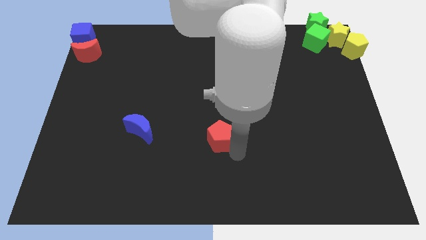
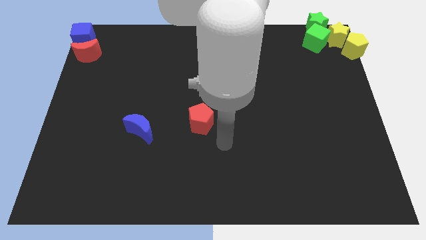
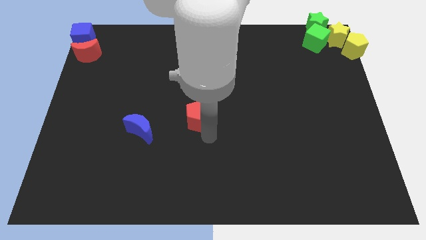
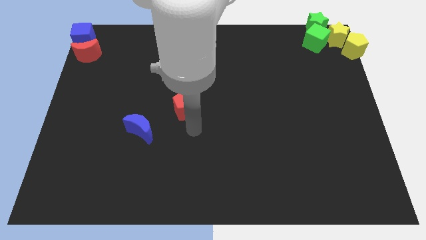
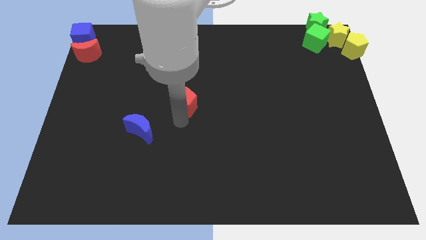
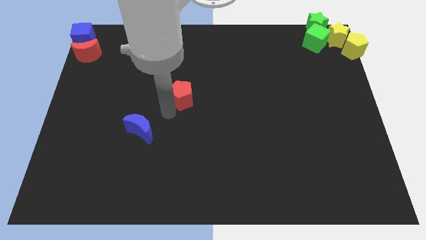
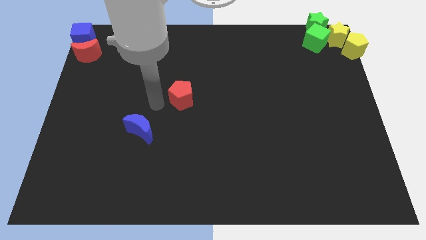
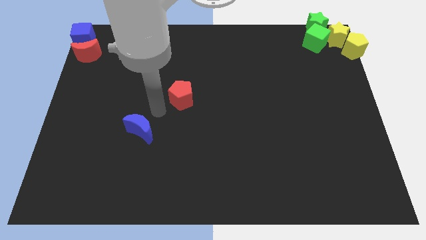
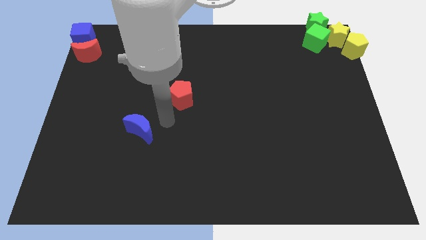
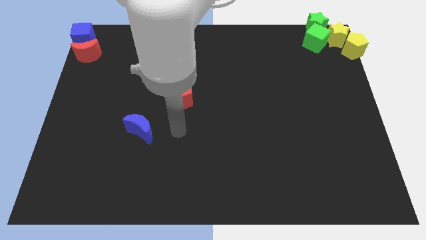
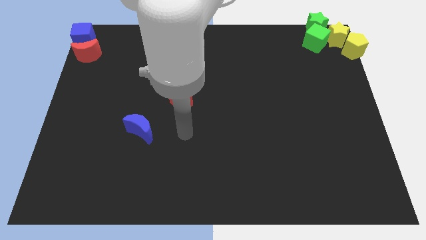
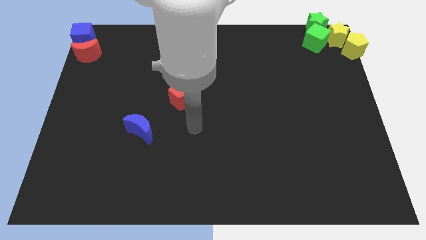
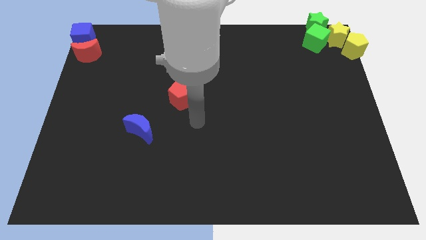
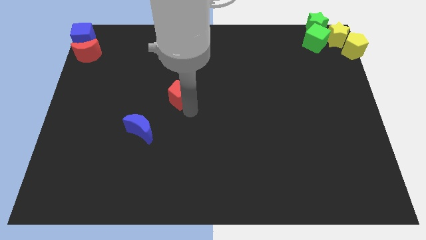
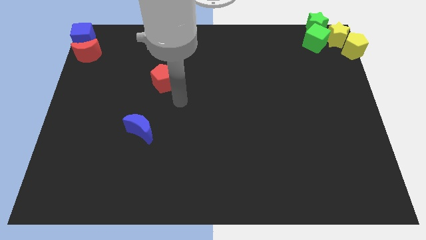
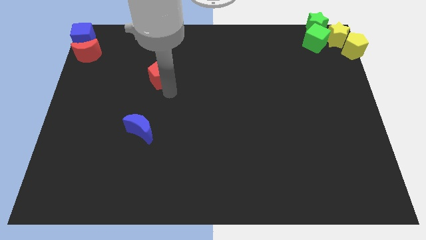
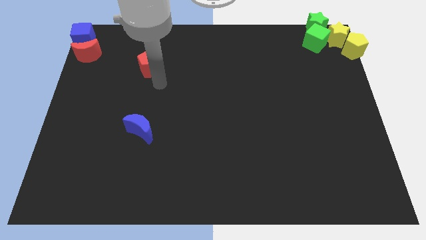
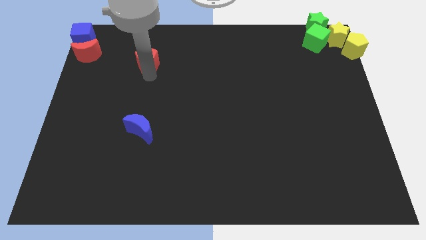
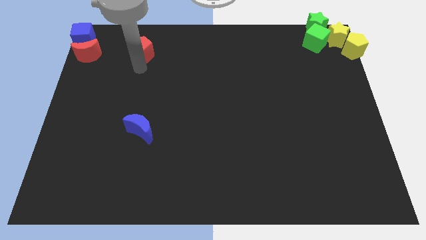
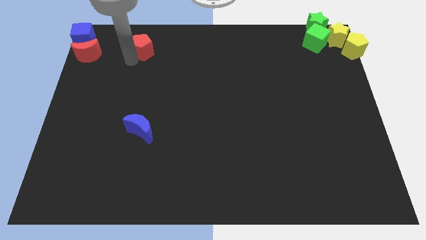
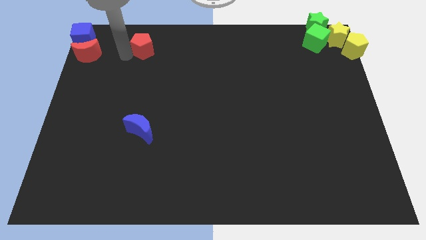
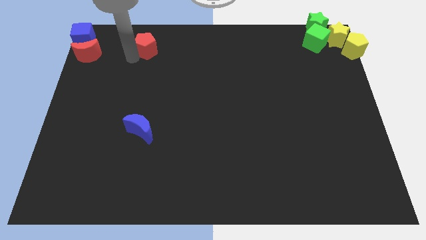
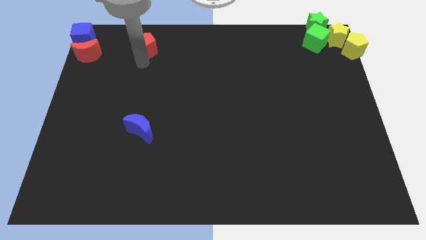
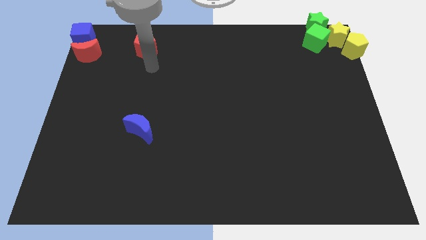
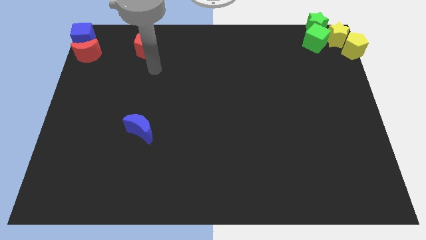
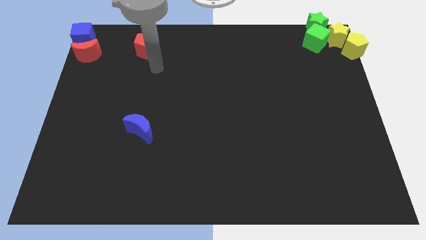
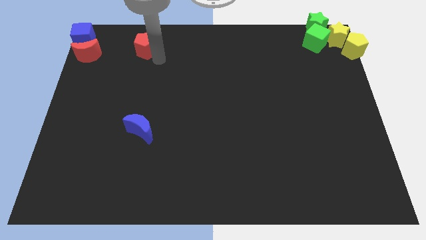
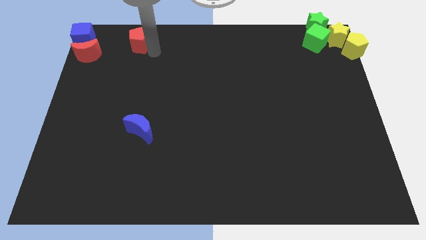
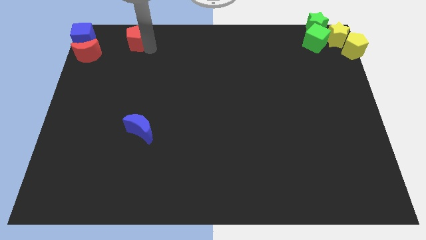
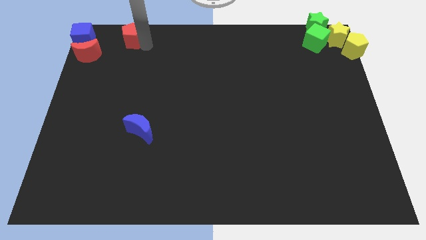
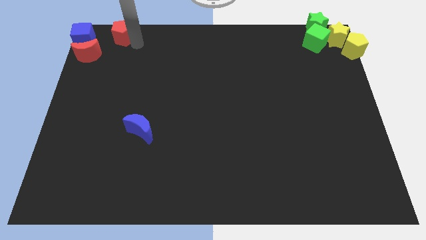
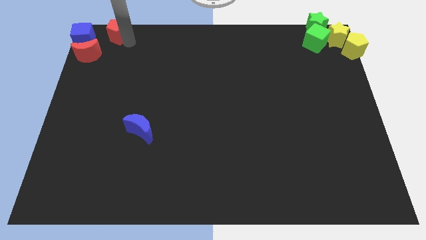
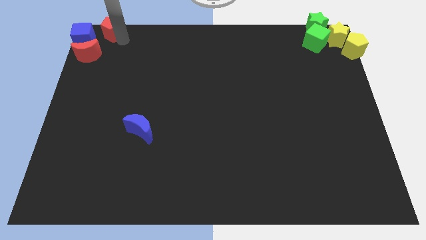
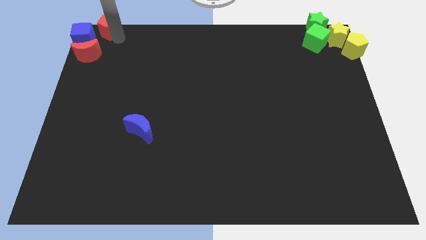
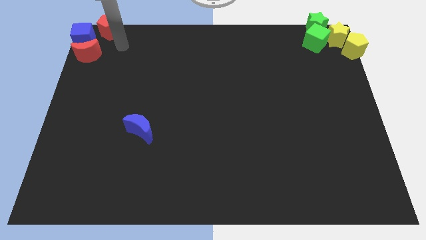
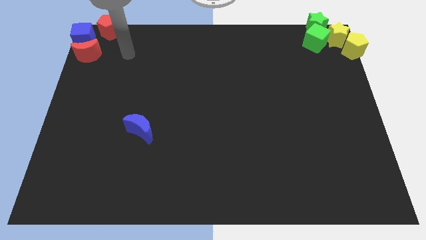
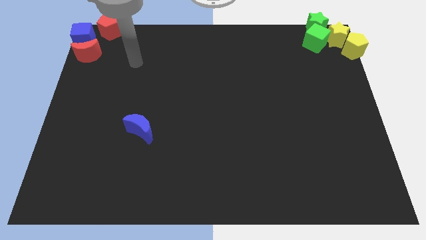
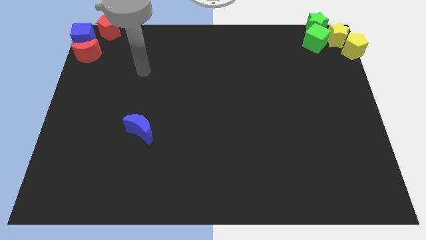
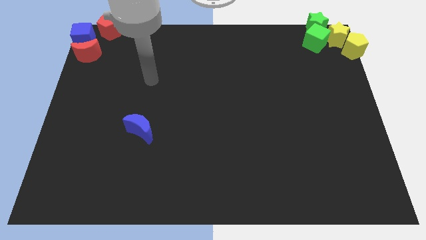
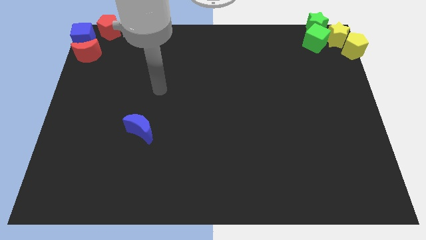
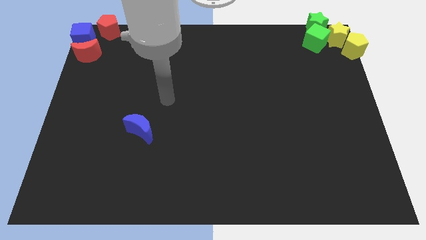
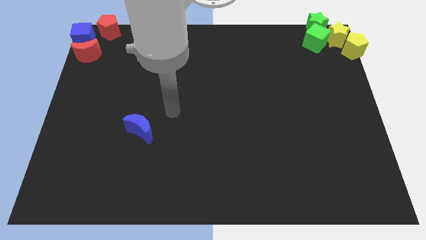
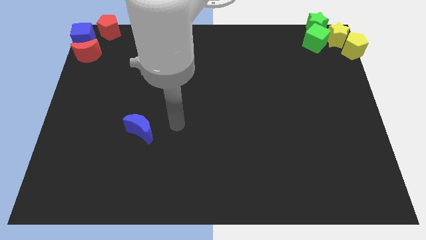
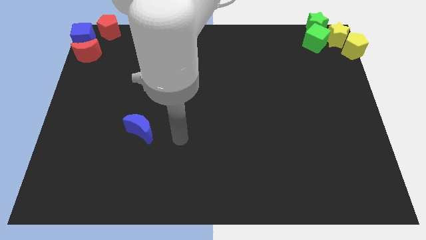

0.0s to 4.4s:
move the red pentagon to the top left

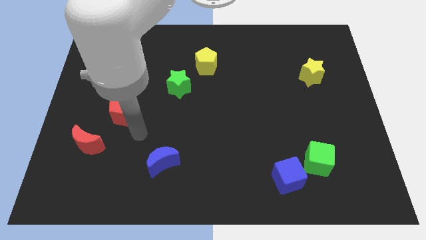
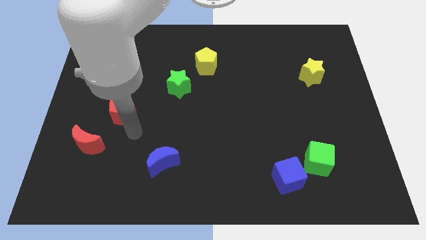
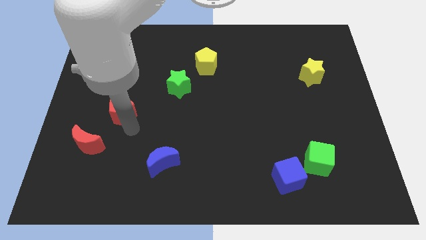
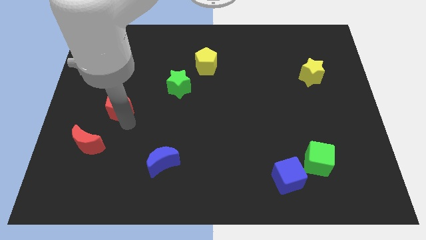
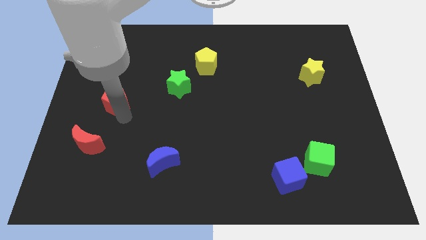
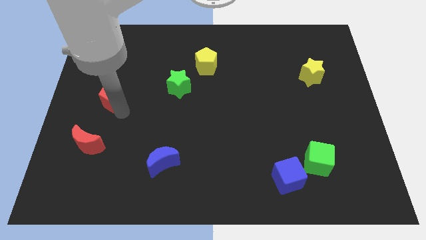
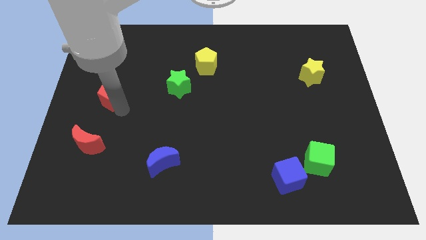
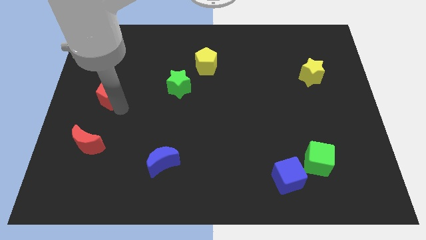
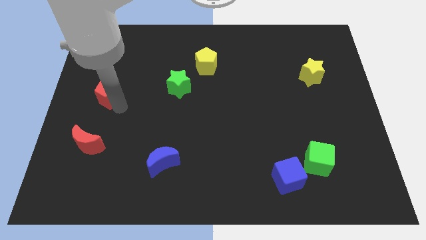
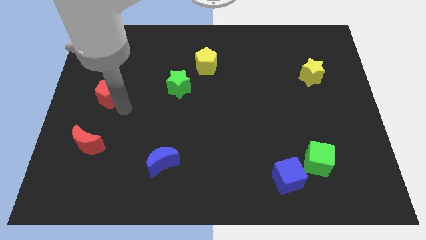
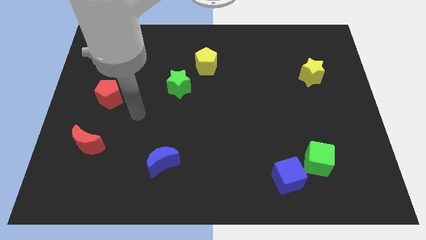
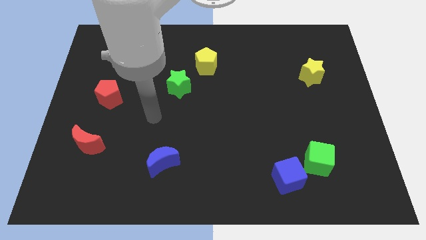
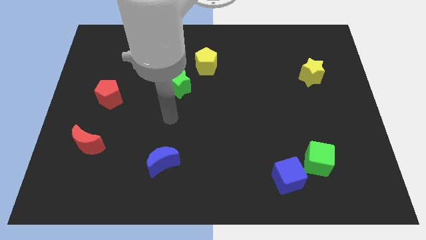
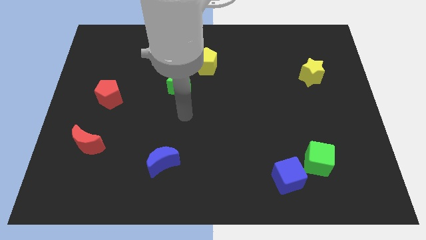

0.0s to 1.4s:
slide the red pentagon top left

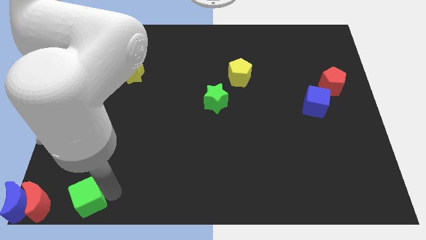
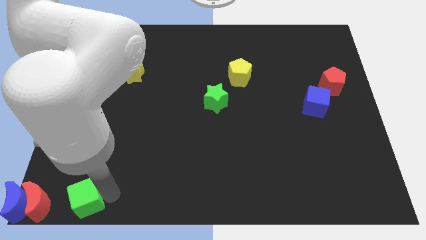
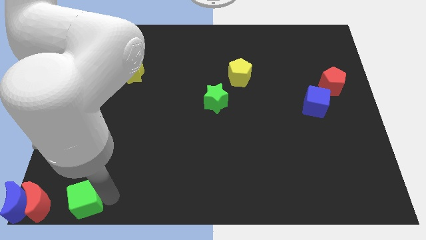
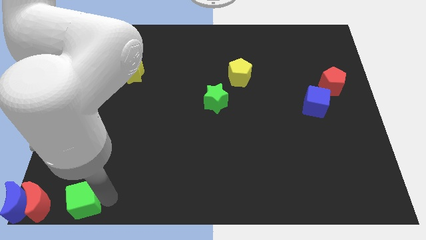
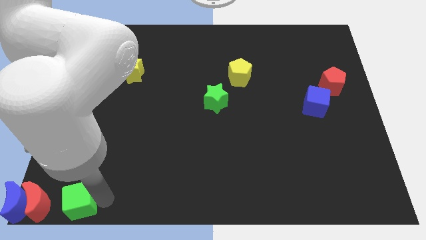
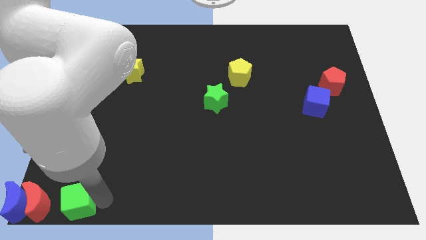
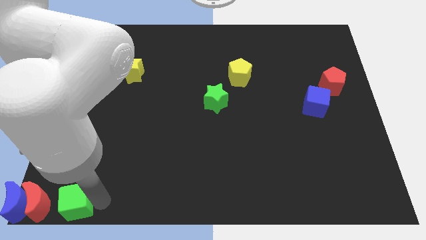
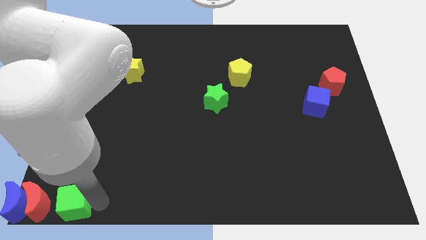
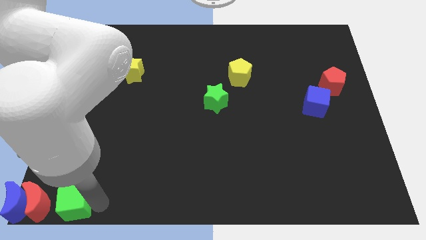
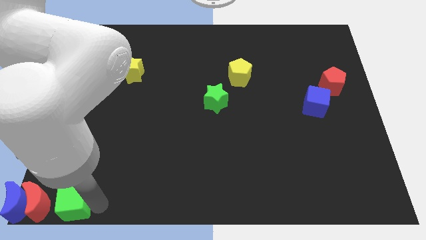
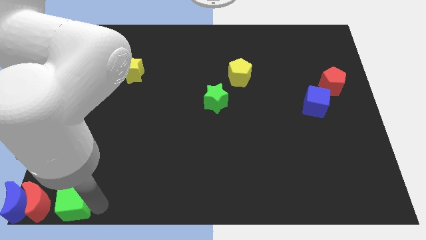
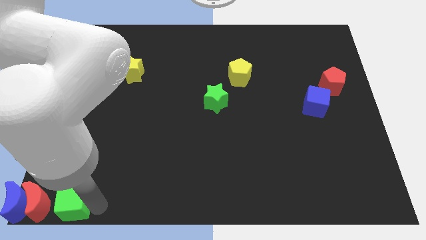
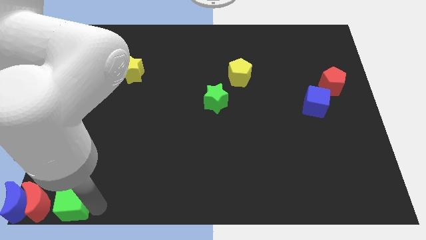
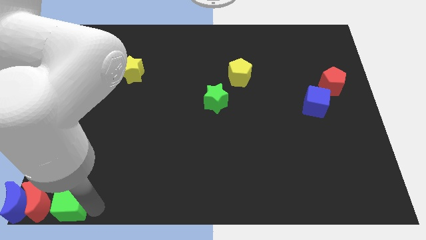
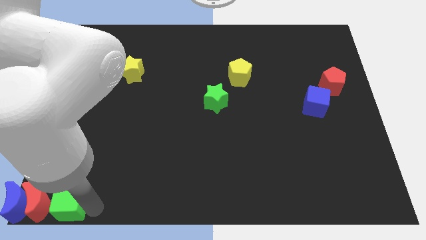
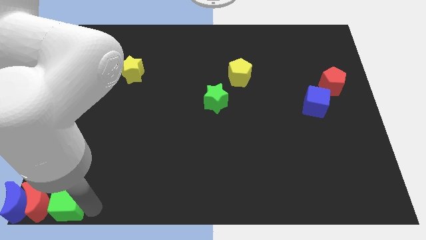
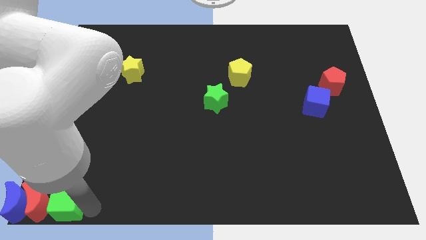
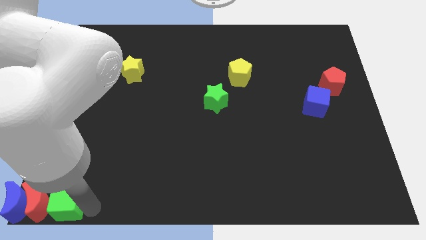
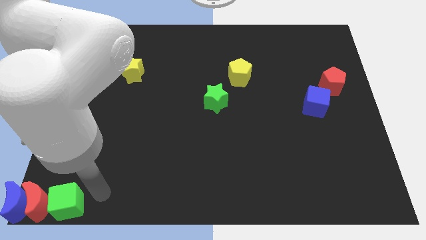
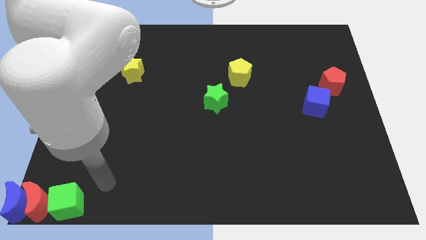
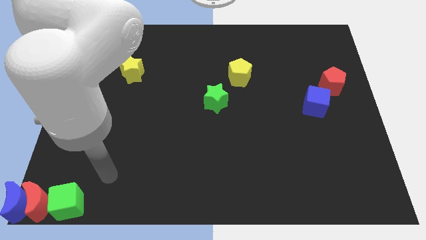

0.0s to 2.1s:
move the green cube to the right side of the red crescent

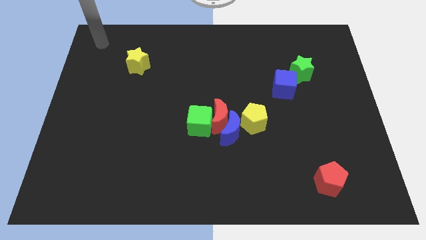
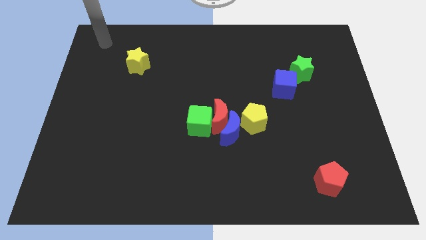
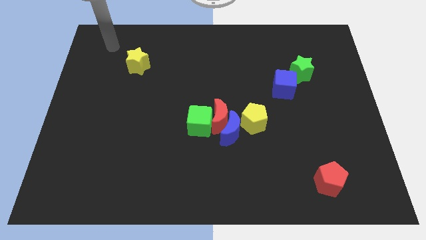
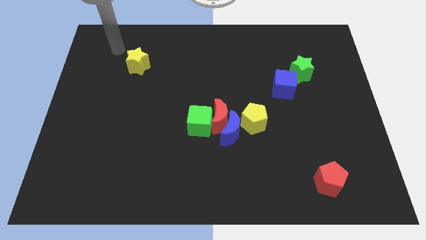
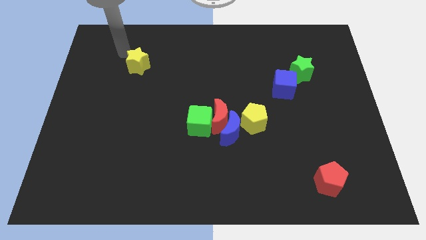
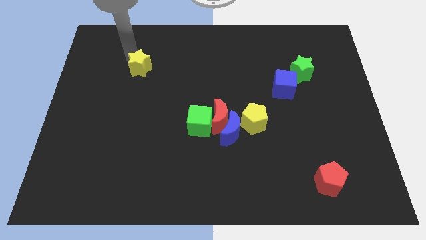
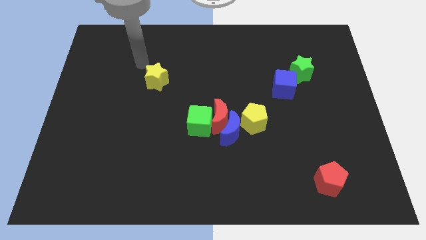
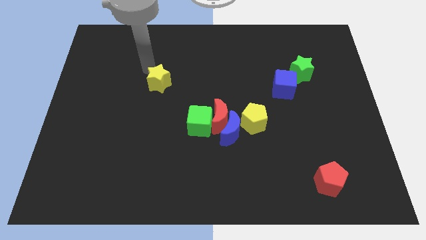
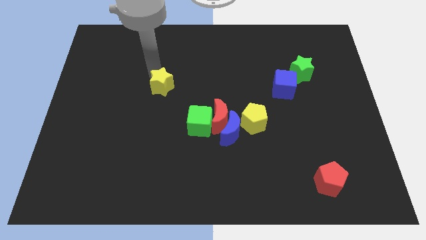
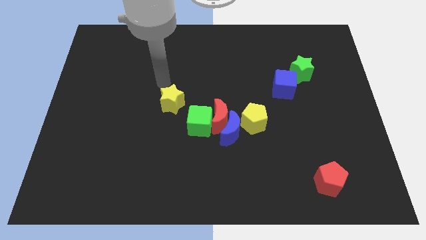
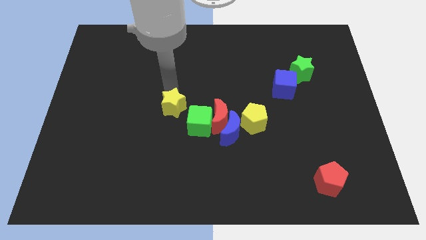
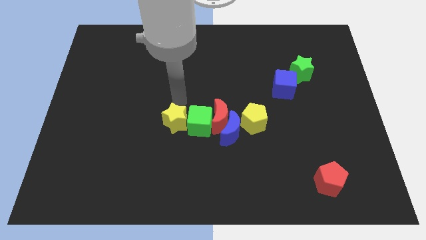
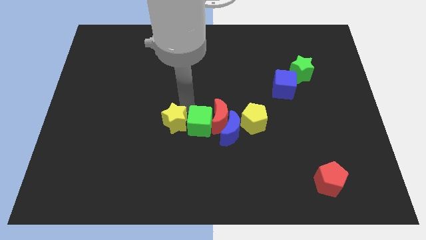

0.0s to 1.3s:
place the yellow star parallel to green cube
